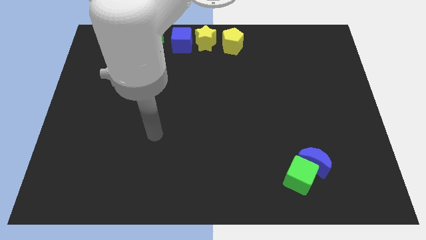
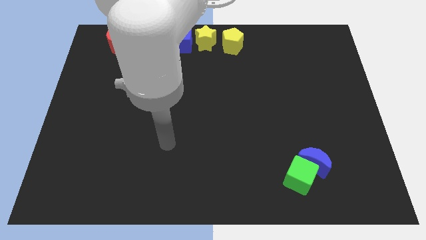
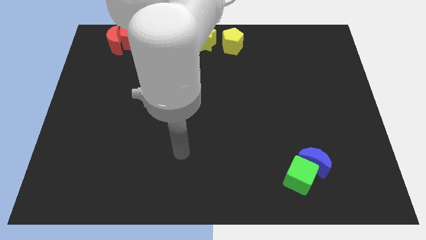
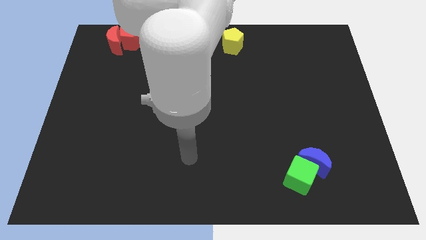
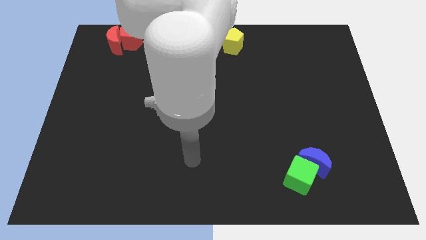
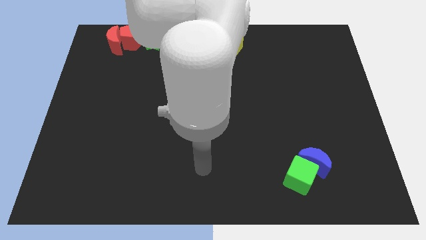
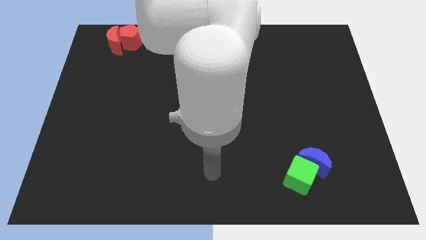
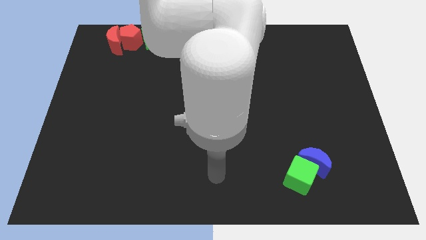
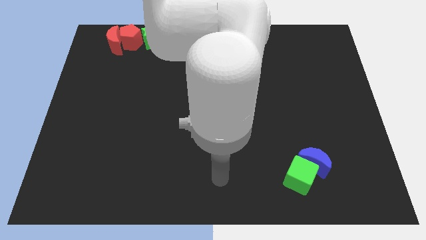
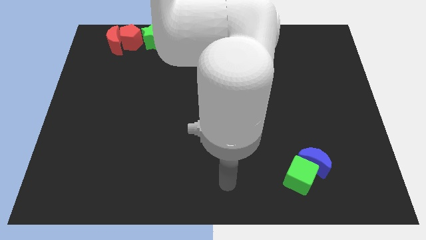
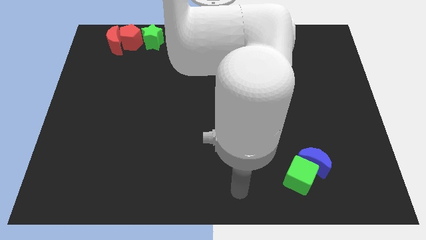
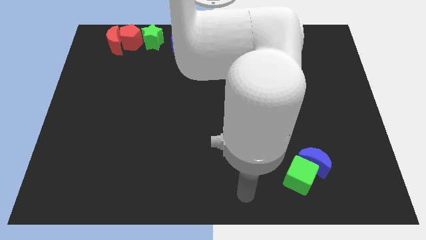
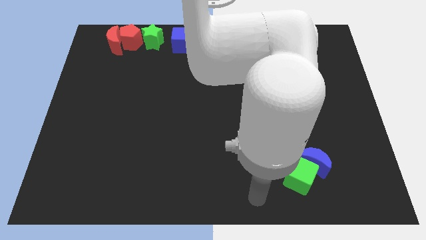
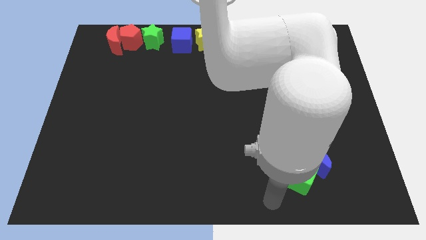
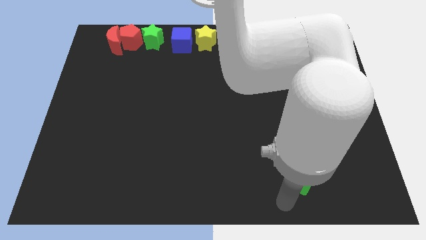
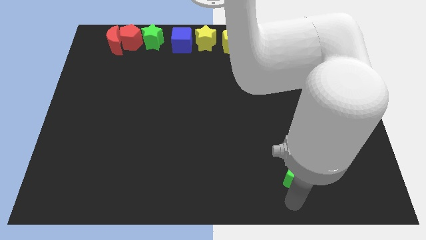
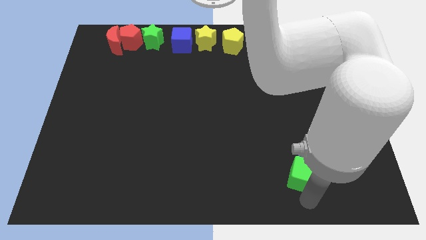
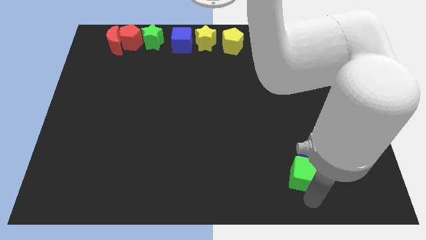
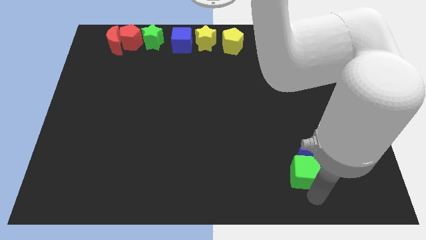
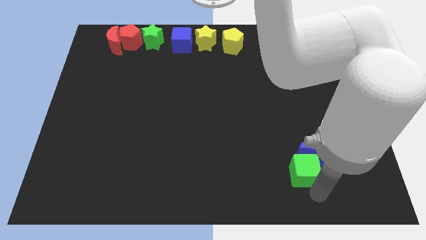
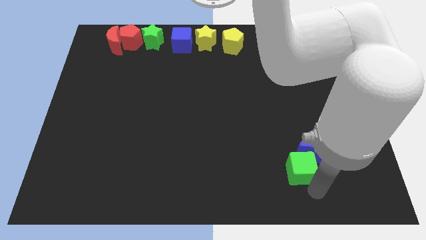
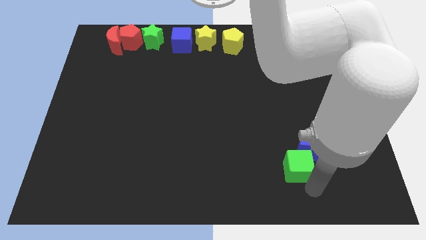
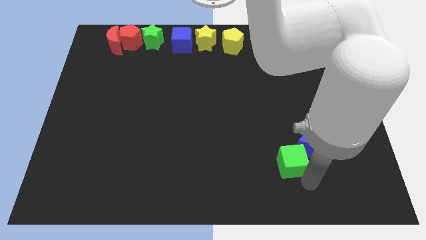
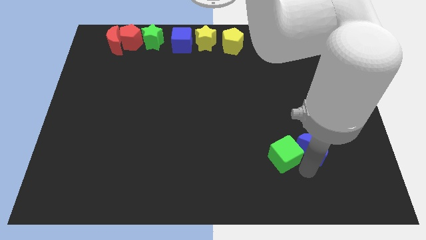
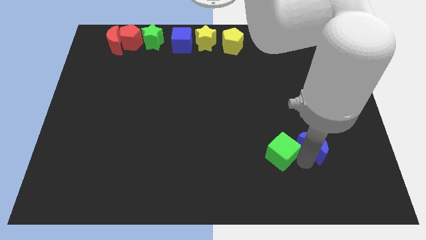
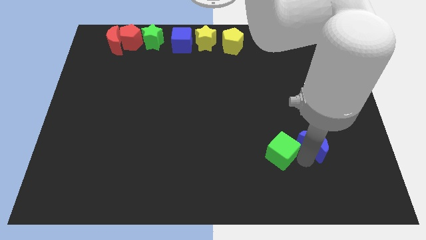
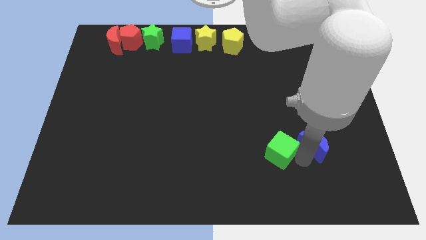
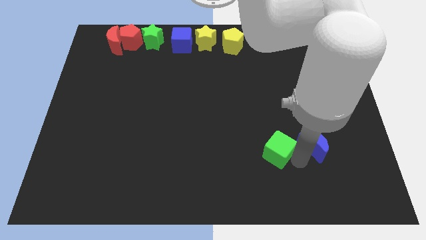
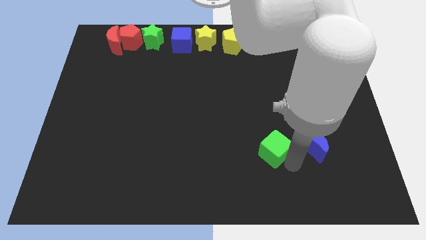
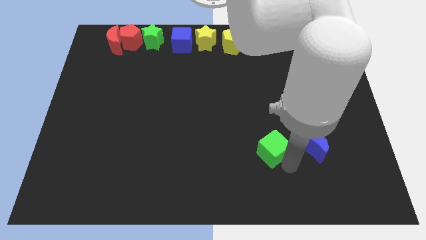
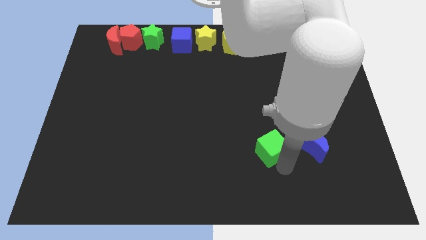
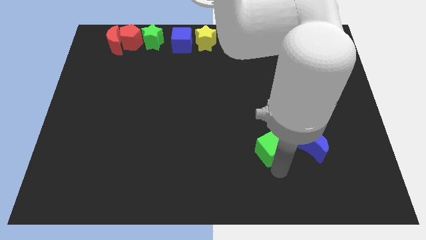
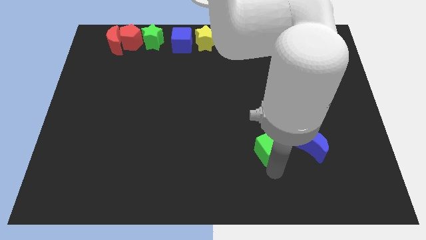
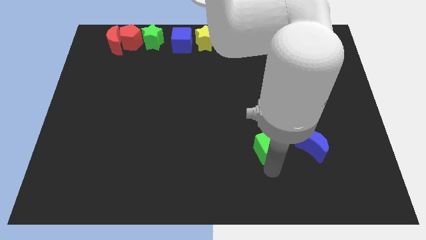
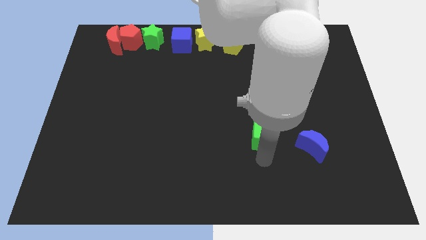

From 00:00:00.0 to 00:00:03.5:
separate the green cube from the blue moon

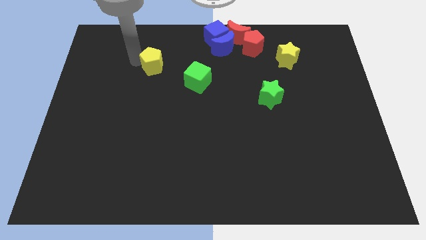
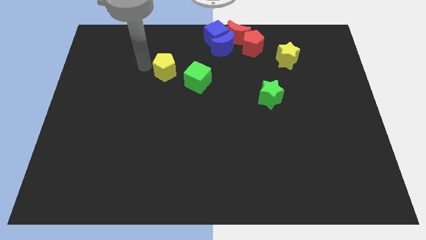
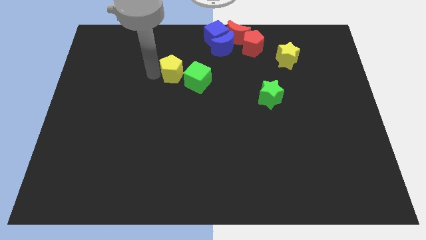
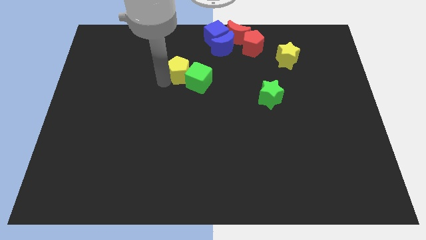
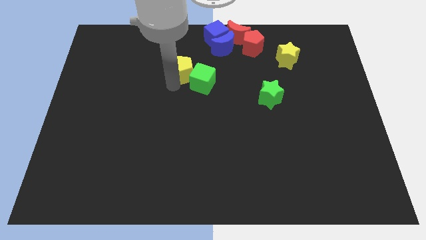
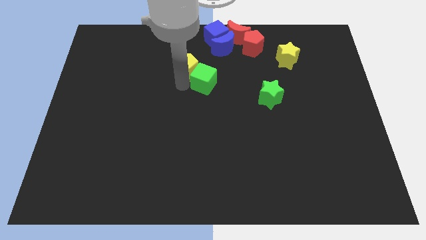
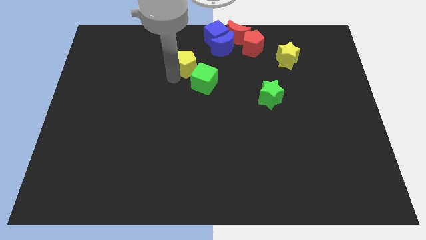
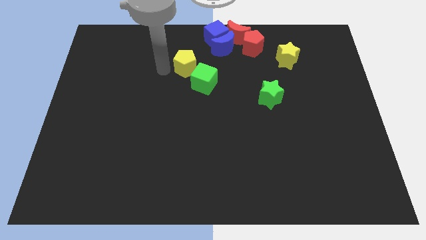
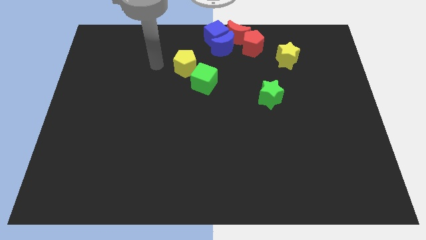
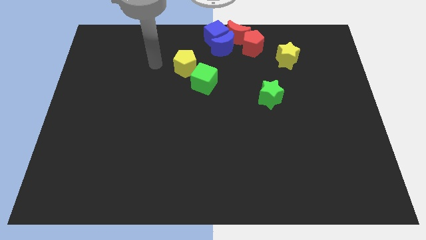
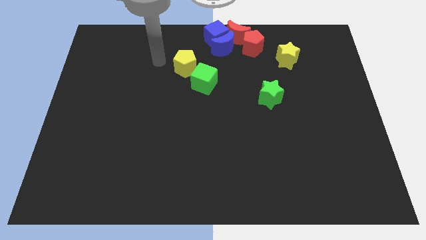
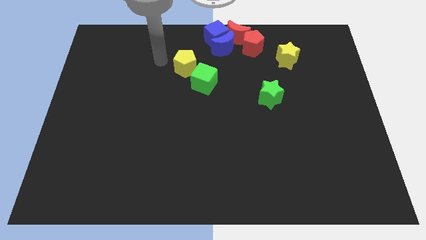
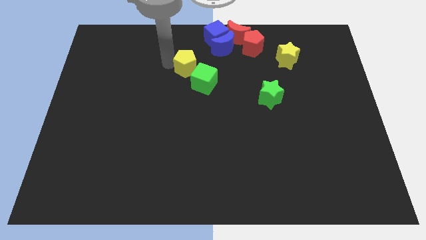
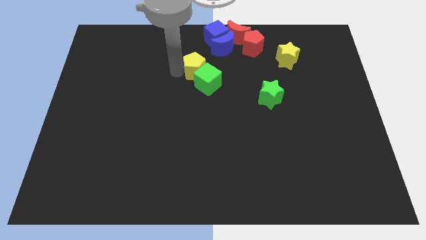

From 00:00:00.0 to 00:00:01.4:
push the yellow pentagon into the green cube

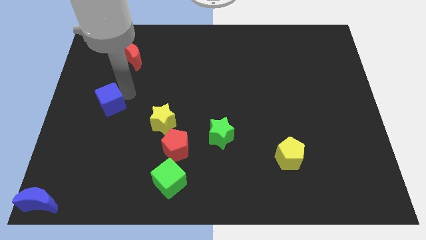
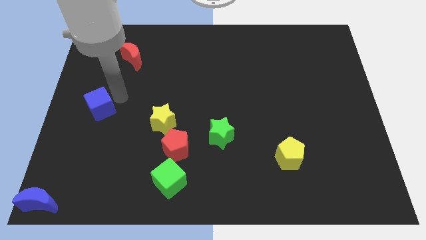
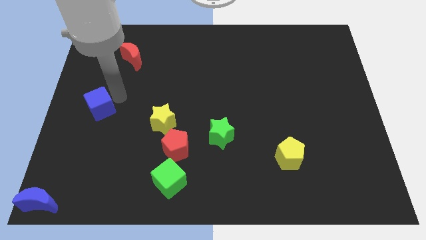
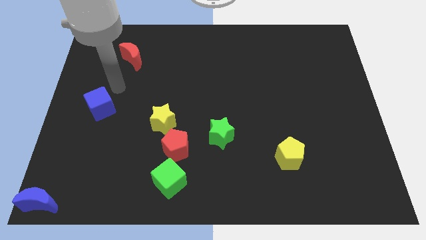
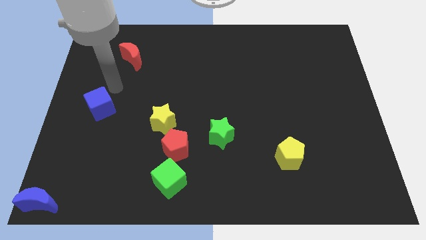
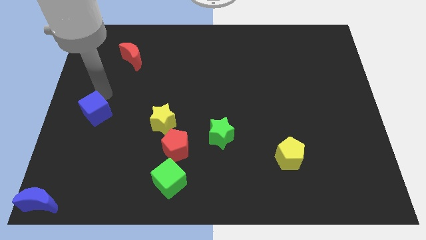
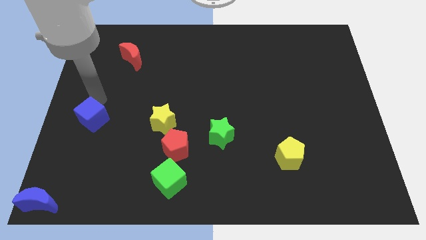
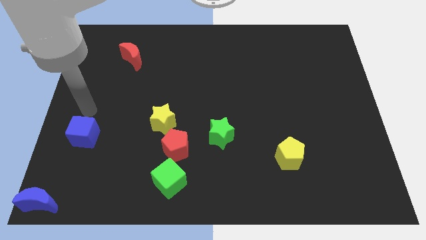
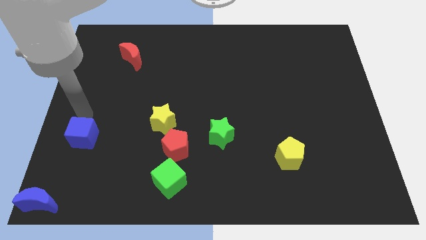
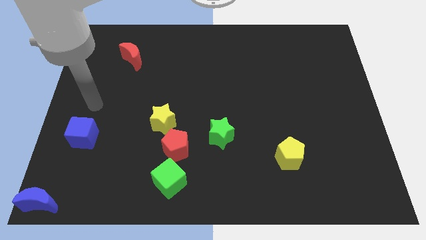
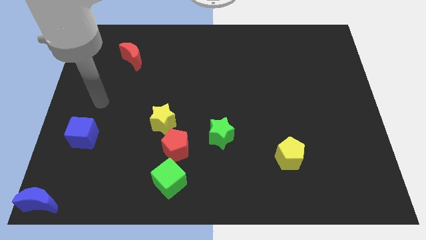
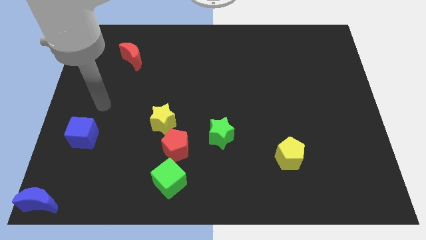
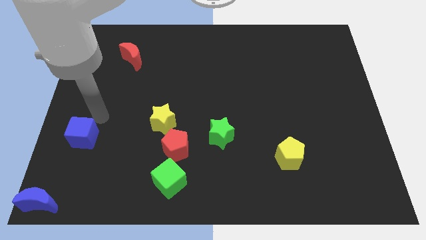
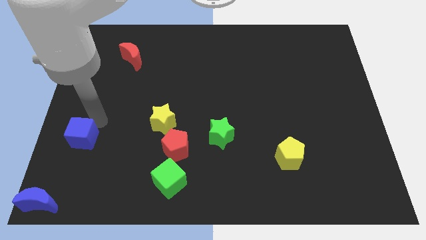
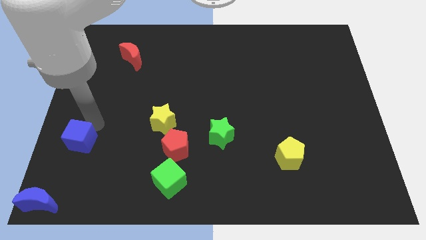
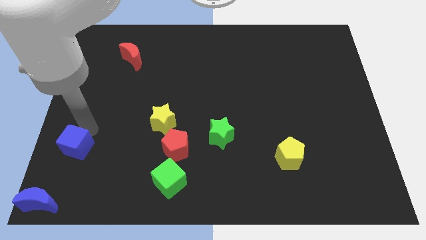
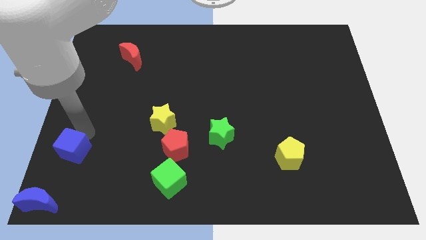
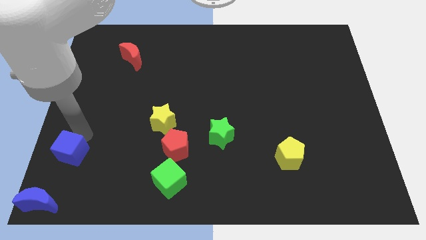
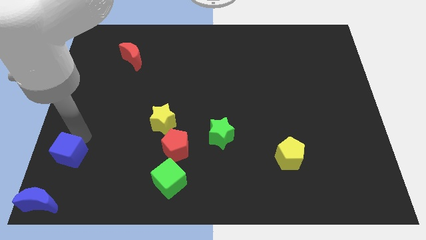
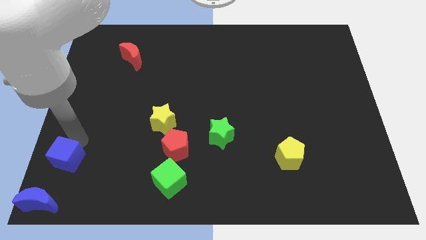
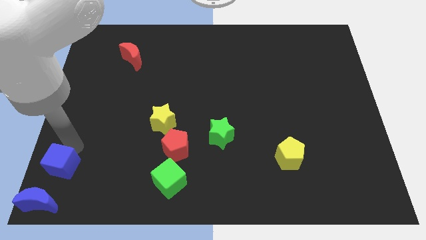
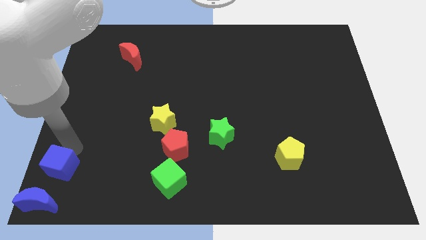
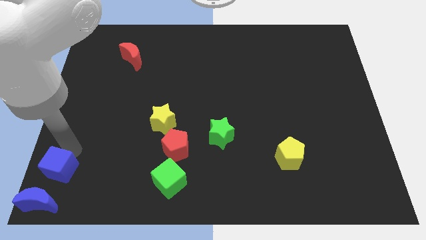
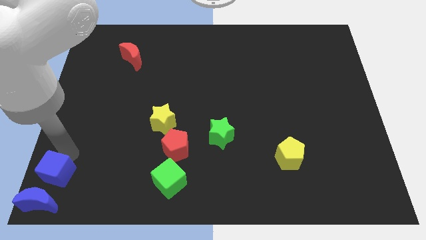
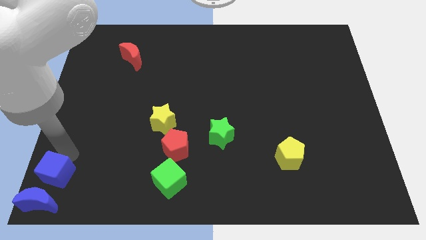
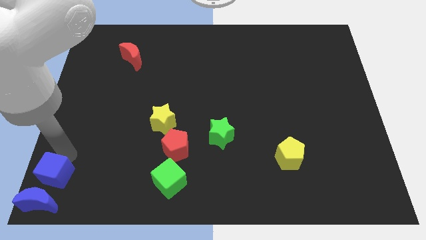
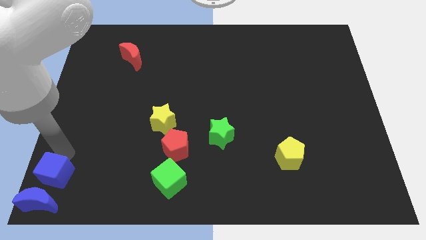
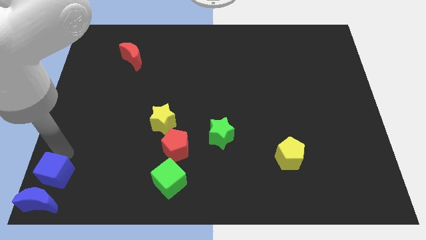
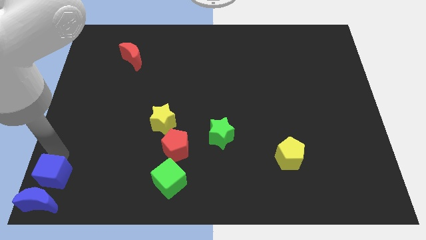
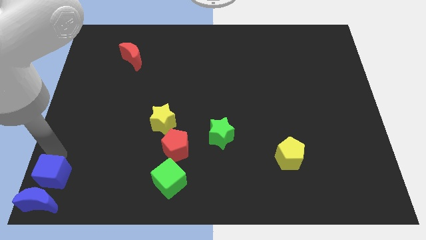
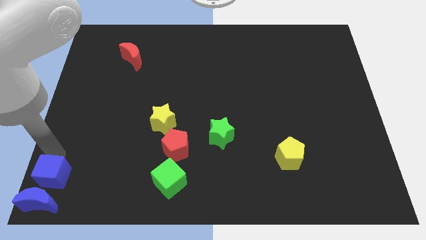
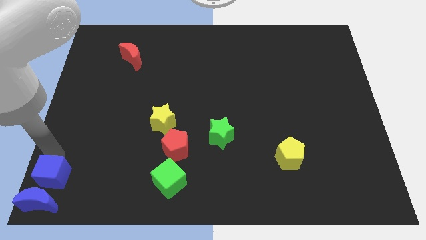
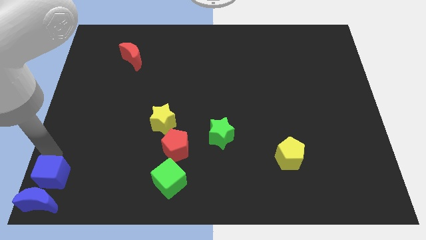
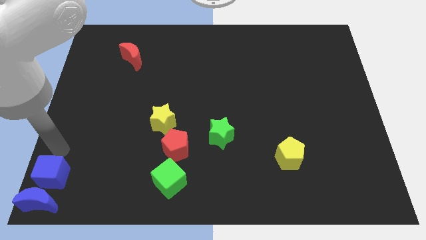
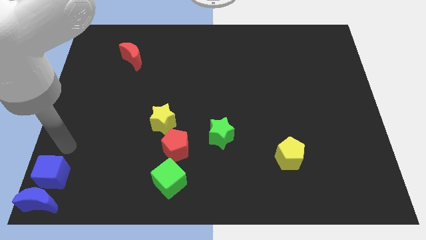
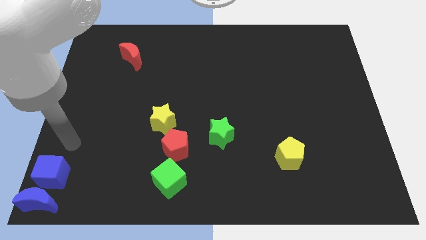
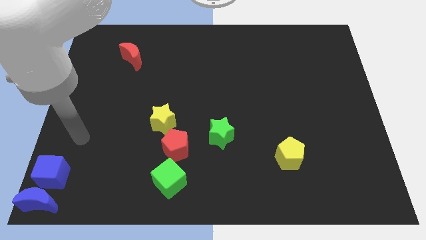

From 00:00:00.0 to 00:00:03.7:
push blue cube above blue moon

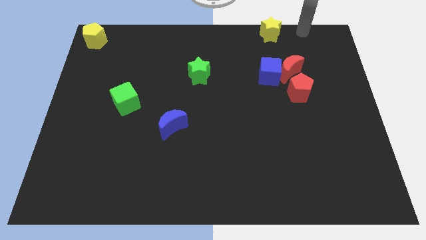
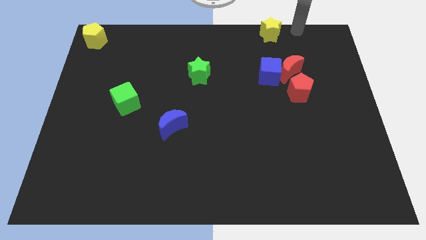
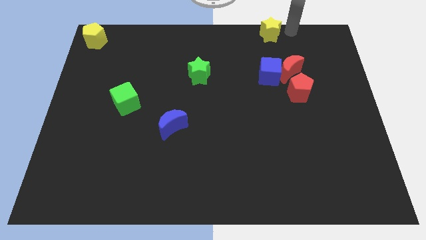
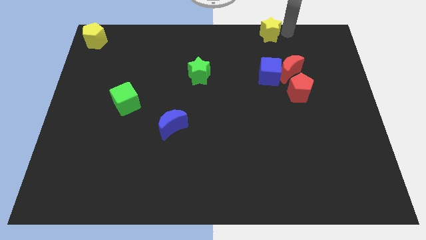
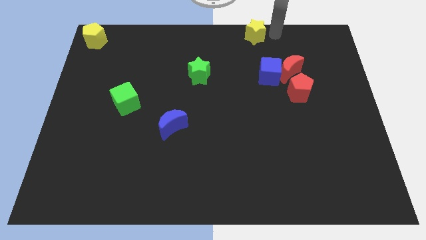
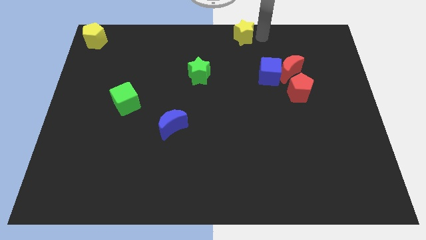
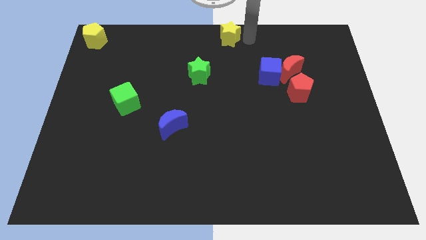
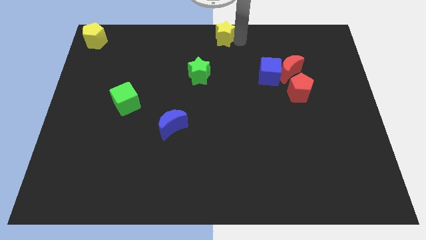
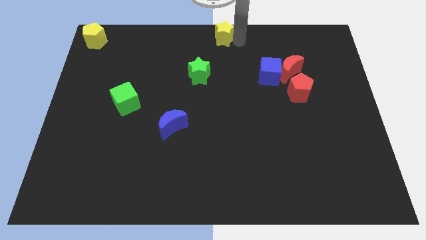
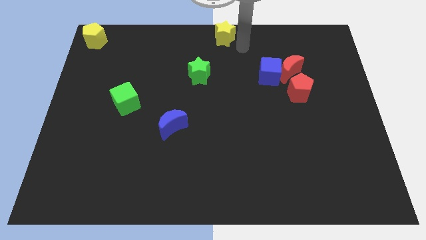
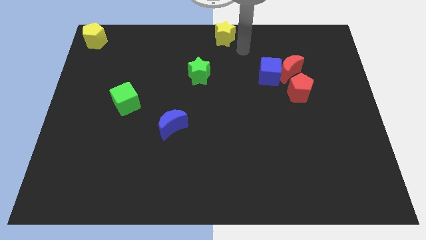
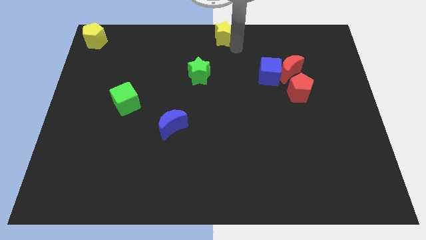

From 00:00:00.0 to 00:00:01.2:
move the yellow star to the top center of the board
